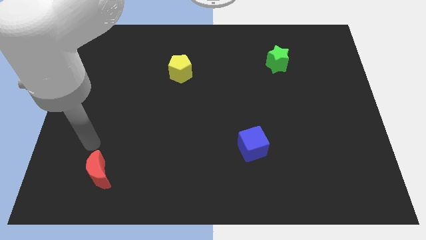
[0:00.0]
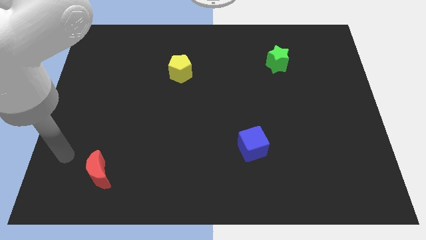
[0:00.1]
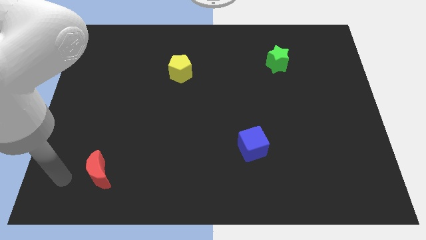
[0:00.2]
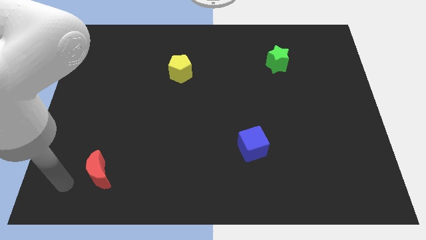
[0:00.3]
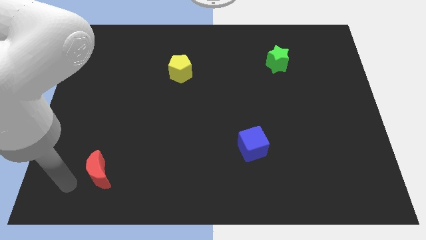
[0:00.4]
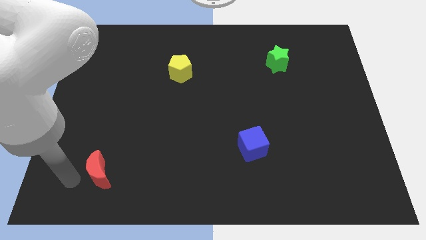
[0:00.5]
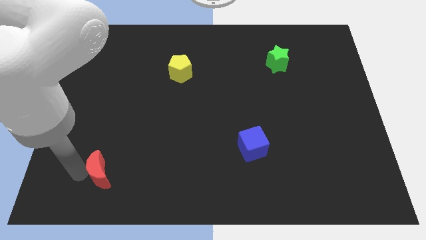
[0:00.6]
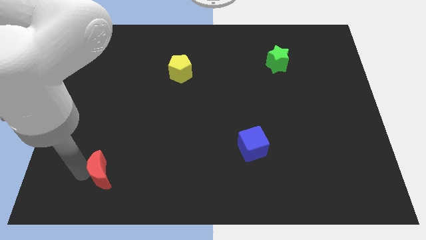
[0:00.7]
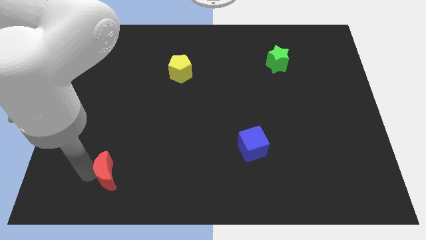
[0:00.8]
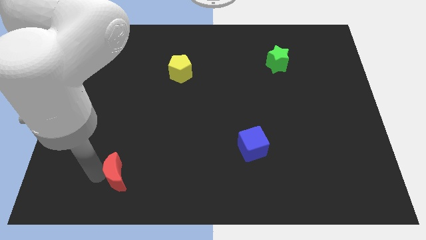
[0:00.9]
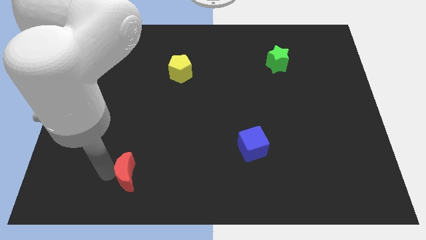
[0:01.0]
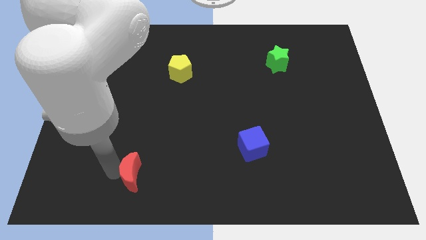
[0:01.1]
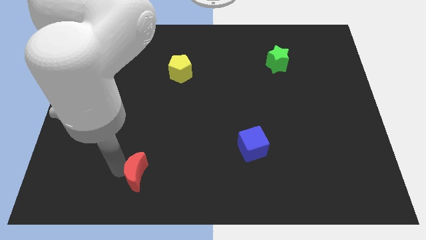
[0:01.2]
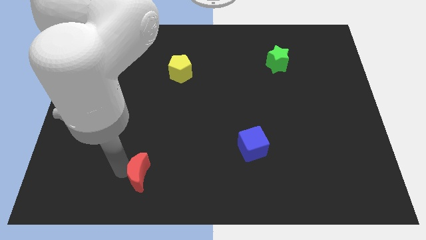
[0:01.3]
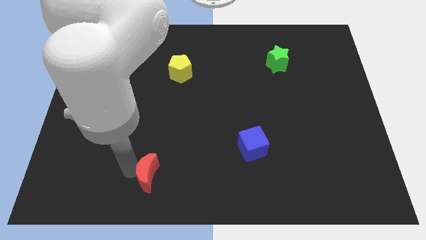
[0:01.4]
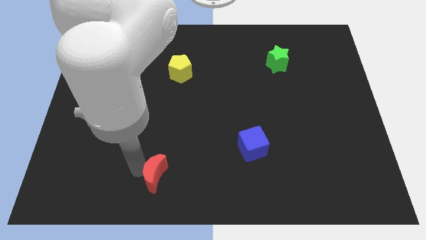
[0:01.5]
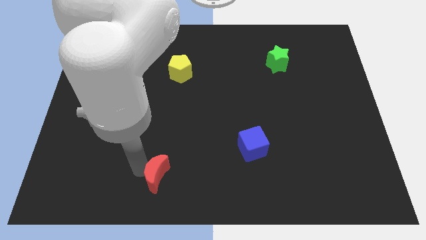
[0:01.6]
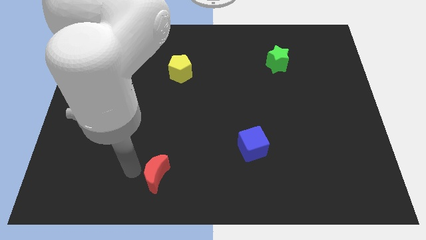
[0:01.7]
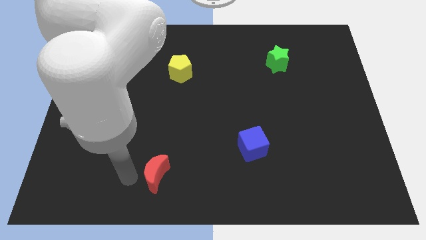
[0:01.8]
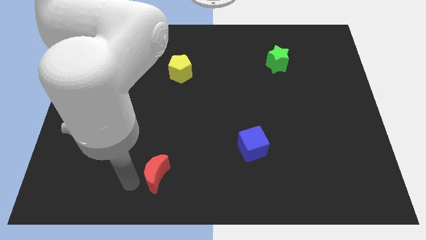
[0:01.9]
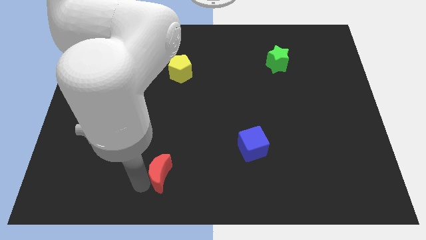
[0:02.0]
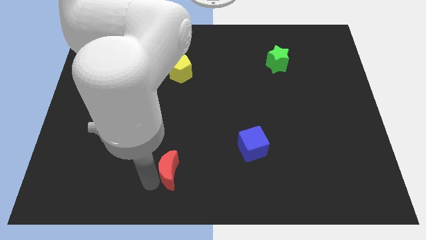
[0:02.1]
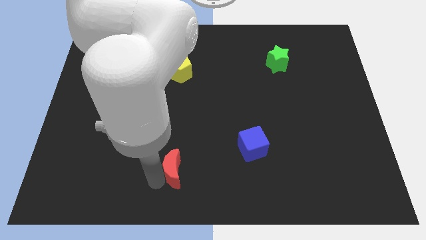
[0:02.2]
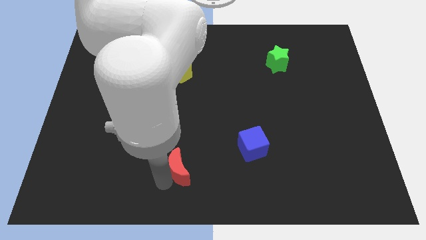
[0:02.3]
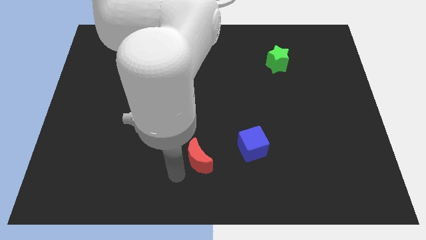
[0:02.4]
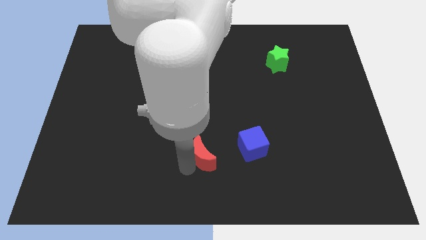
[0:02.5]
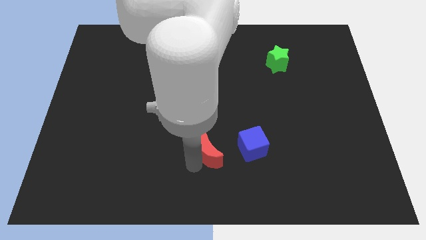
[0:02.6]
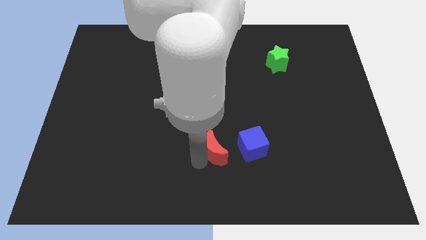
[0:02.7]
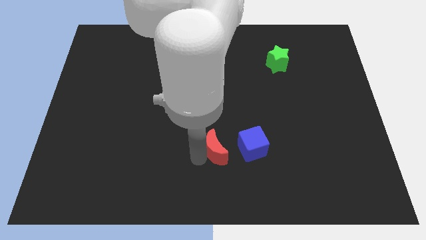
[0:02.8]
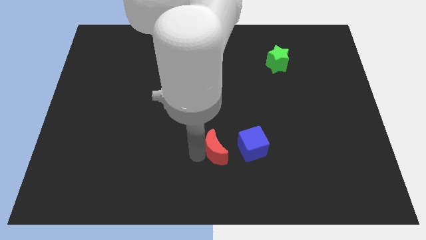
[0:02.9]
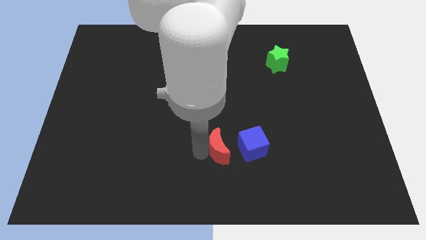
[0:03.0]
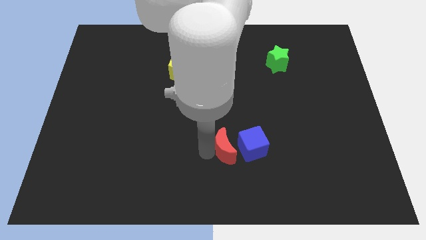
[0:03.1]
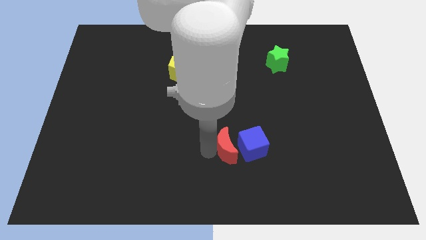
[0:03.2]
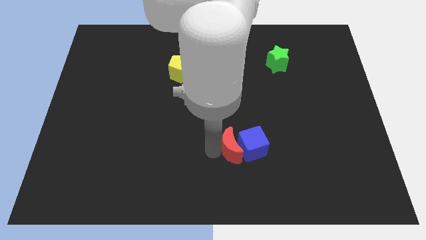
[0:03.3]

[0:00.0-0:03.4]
slide the moon towards the blue cube

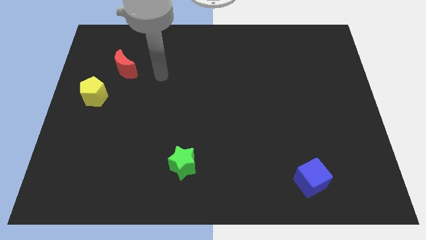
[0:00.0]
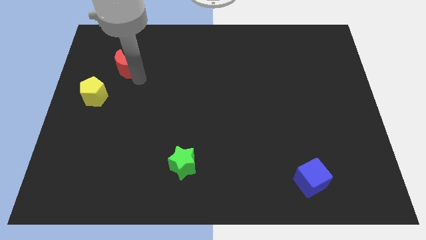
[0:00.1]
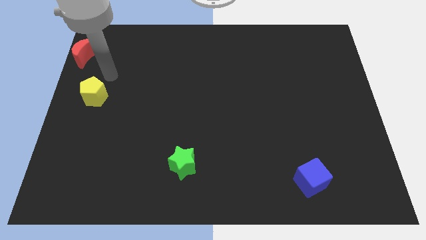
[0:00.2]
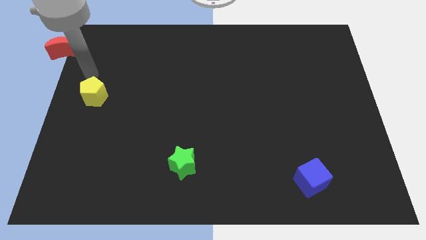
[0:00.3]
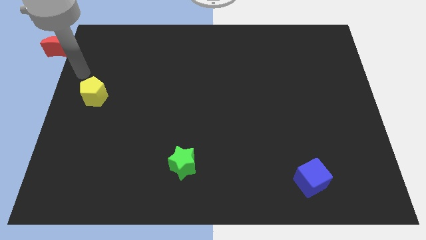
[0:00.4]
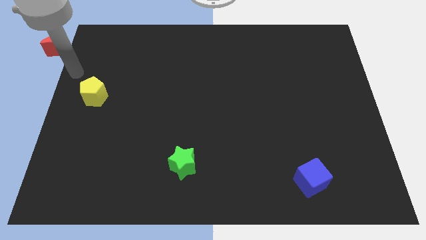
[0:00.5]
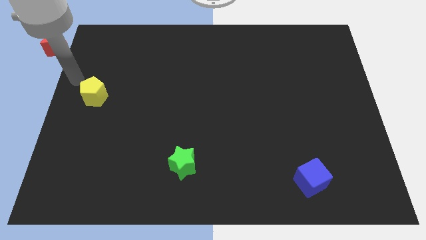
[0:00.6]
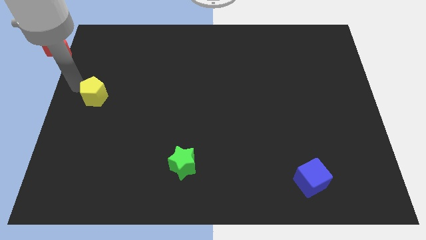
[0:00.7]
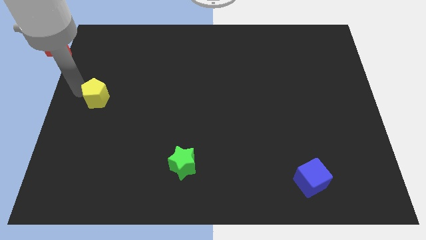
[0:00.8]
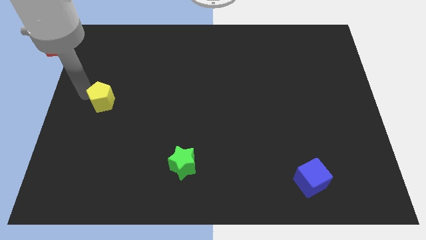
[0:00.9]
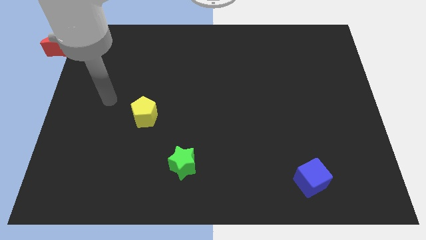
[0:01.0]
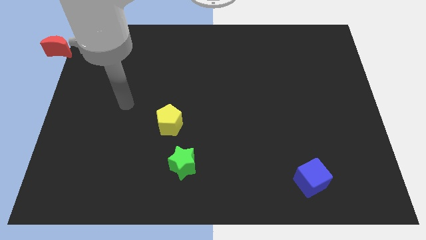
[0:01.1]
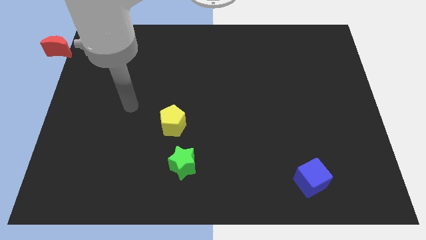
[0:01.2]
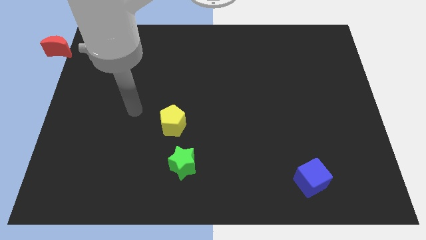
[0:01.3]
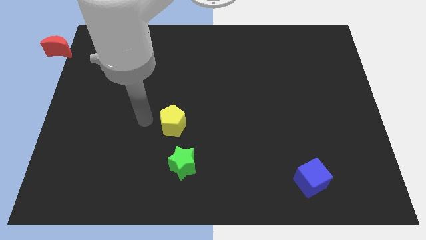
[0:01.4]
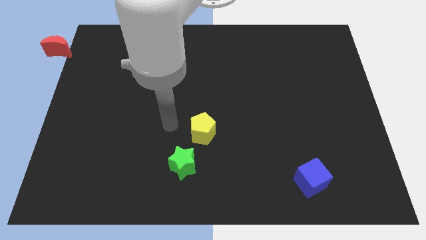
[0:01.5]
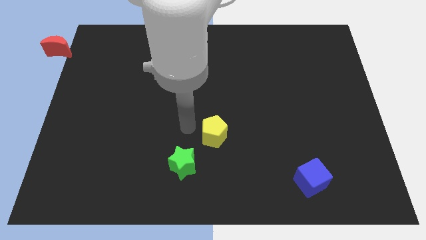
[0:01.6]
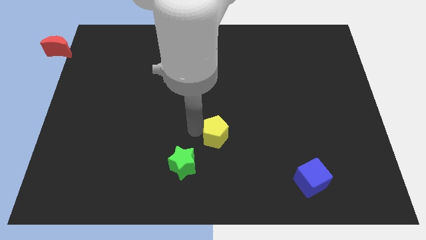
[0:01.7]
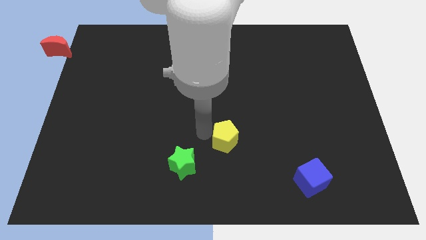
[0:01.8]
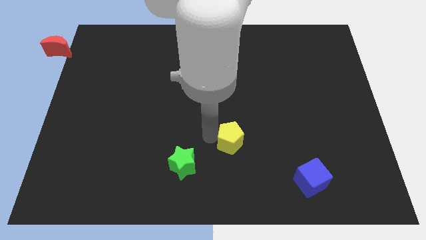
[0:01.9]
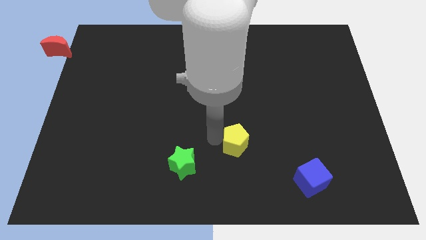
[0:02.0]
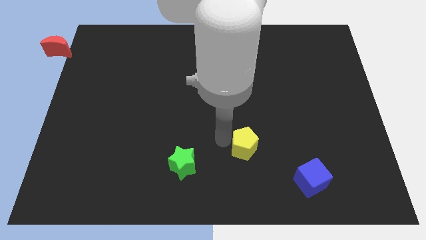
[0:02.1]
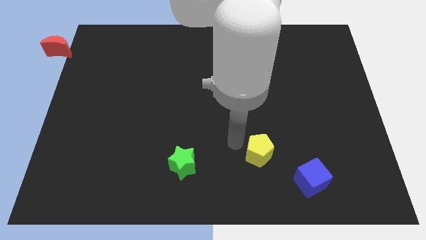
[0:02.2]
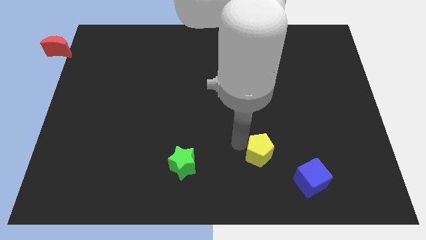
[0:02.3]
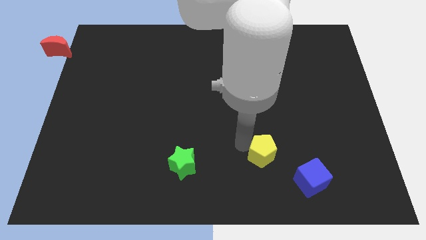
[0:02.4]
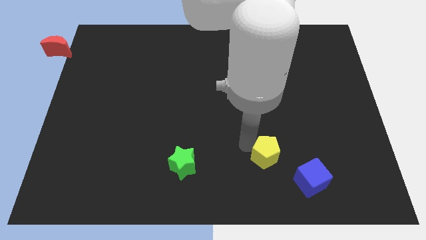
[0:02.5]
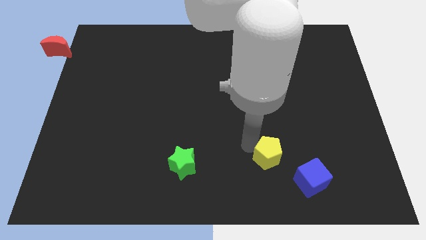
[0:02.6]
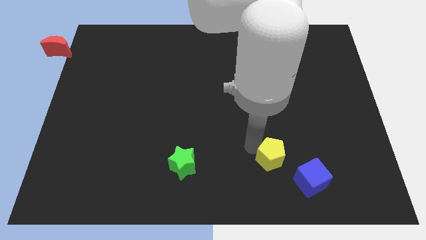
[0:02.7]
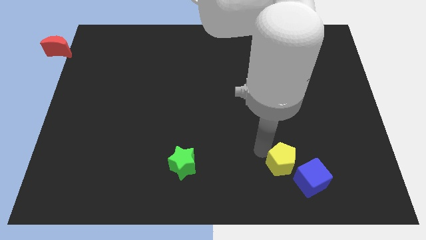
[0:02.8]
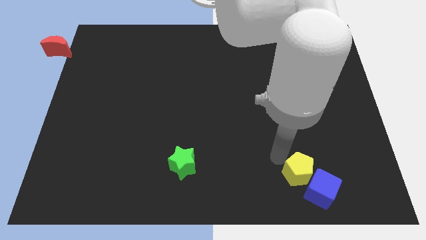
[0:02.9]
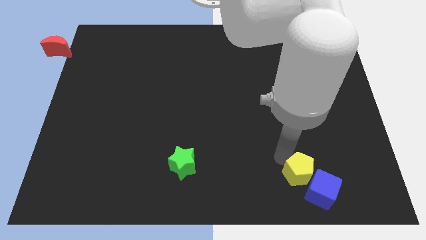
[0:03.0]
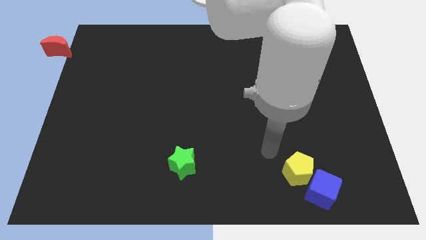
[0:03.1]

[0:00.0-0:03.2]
put the yellow pentagon close to the cube

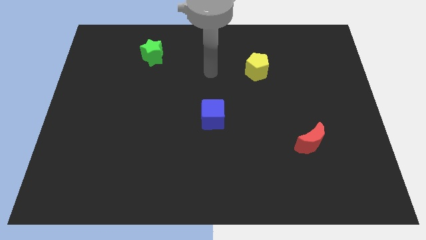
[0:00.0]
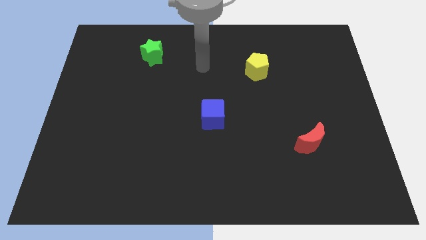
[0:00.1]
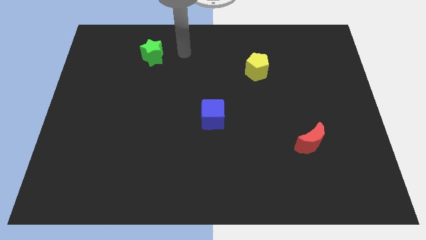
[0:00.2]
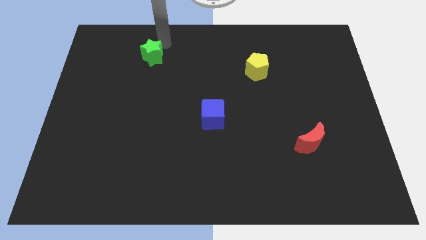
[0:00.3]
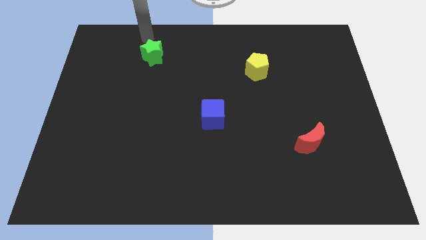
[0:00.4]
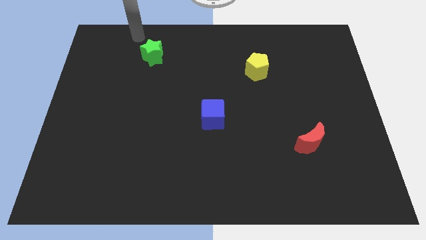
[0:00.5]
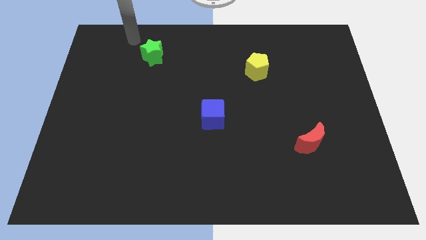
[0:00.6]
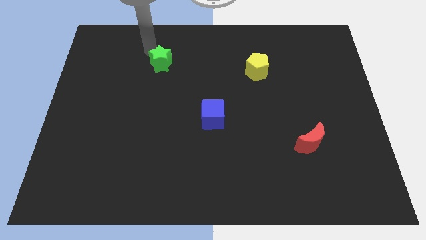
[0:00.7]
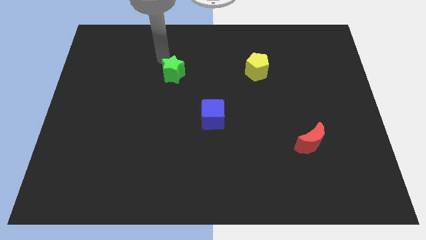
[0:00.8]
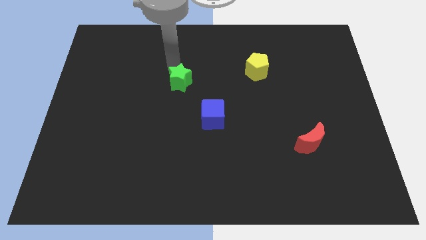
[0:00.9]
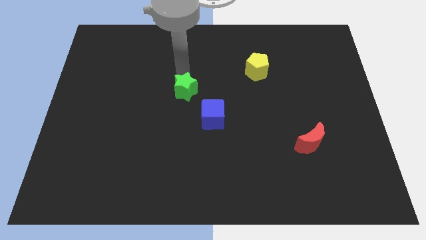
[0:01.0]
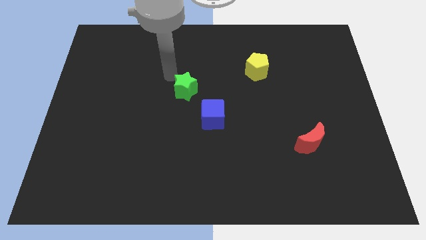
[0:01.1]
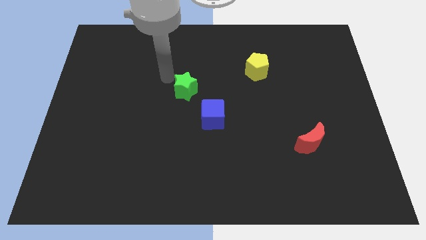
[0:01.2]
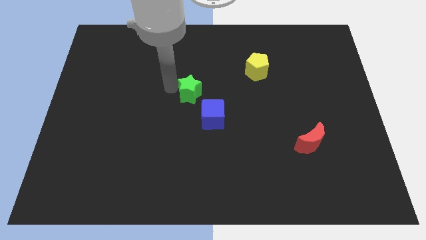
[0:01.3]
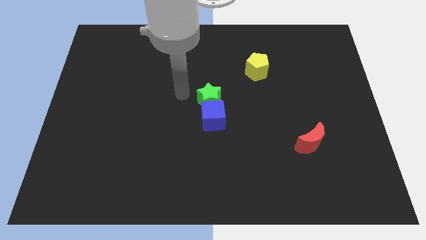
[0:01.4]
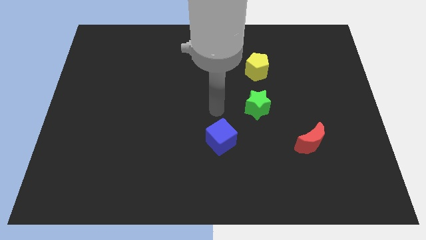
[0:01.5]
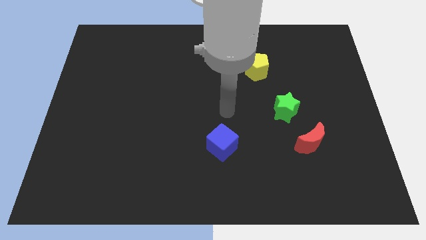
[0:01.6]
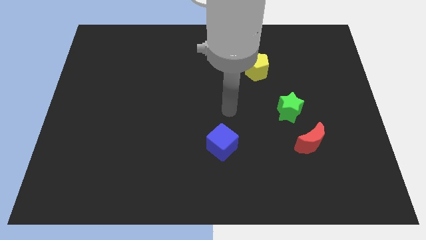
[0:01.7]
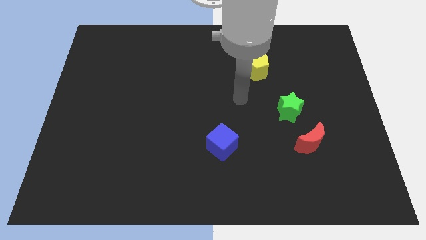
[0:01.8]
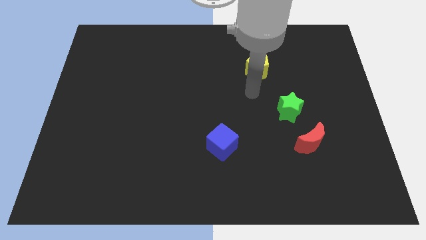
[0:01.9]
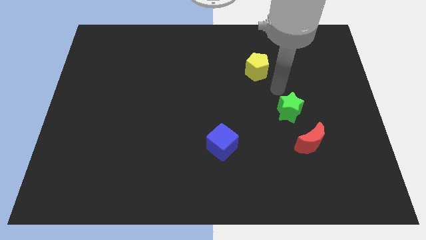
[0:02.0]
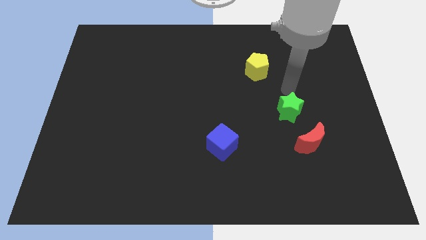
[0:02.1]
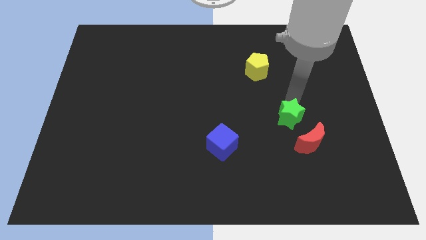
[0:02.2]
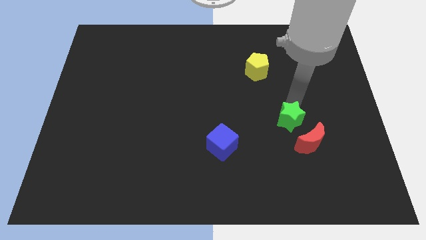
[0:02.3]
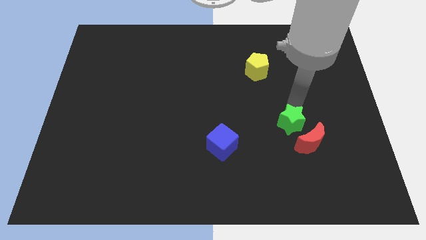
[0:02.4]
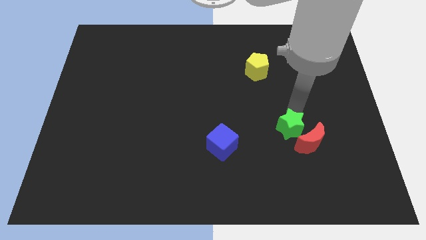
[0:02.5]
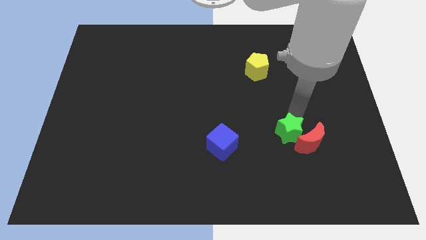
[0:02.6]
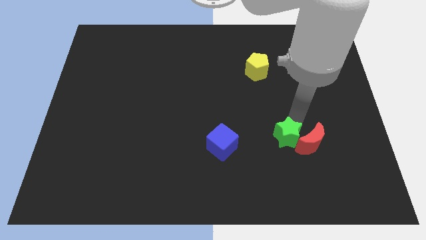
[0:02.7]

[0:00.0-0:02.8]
push the green block to the red moon
